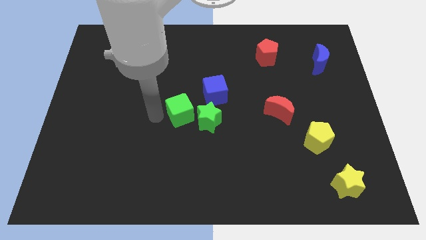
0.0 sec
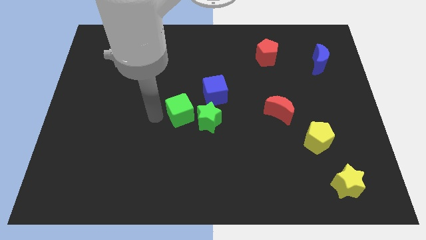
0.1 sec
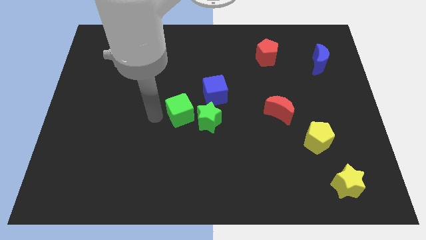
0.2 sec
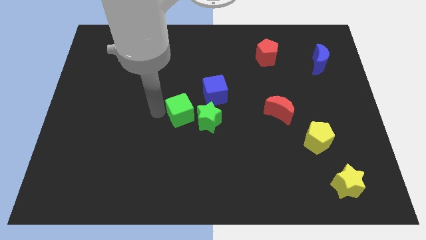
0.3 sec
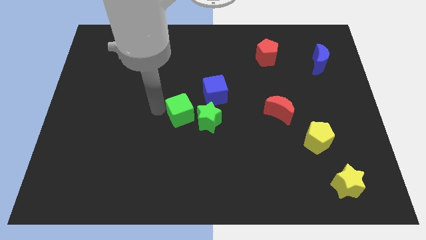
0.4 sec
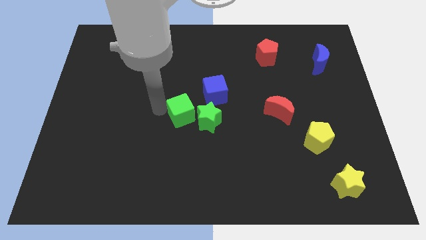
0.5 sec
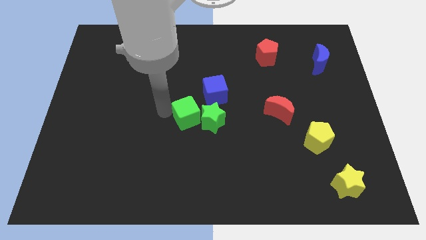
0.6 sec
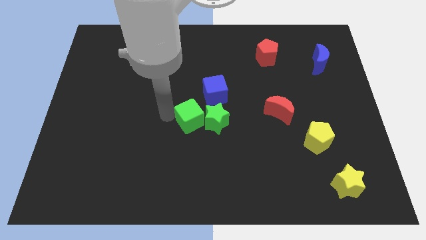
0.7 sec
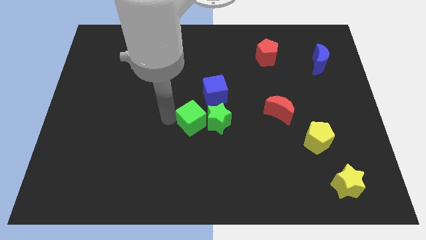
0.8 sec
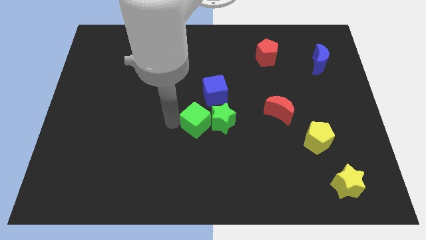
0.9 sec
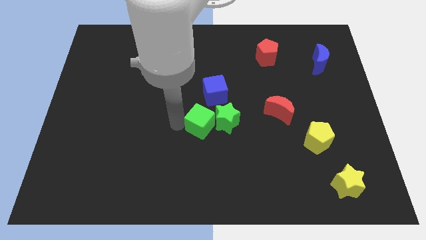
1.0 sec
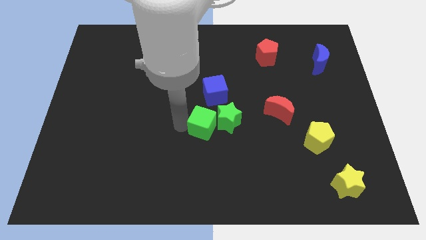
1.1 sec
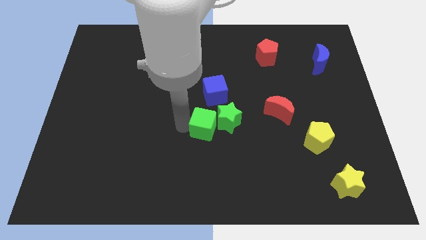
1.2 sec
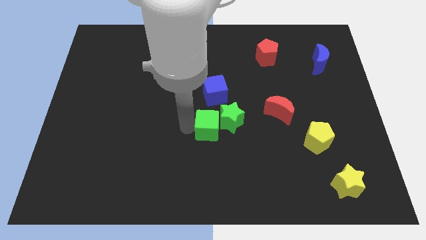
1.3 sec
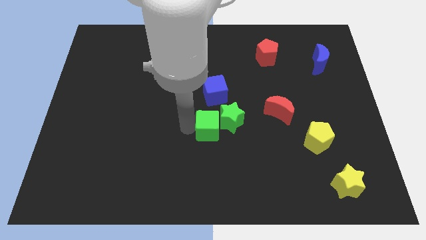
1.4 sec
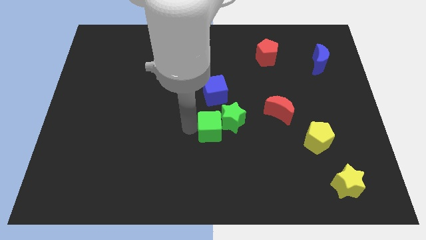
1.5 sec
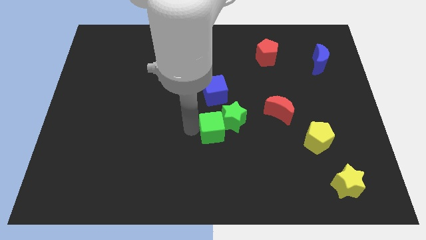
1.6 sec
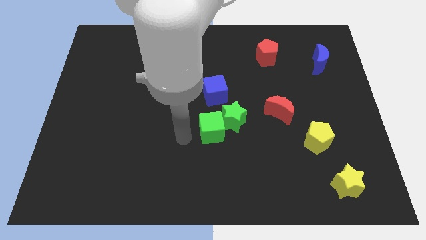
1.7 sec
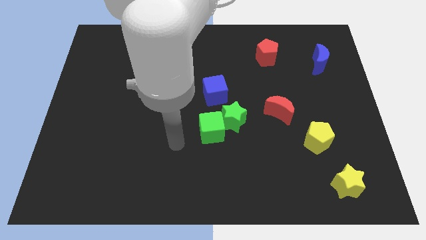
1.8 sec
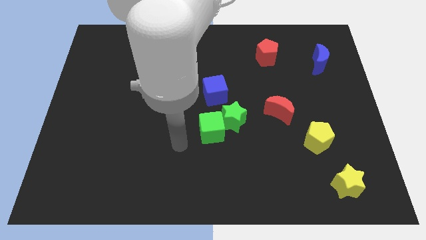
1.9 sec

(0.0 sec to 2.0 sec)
push the green cube into the green star

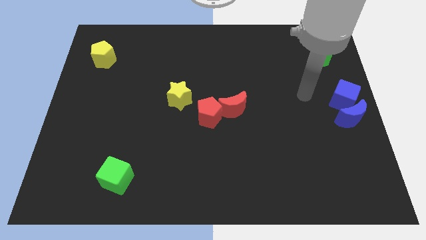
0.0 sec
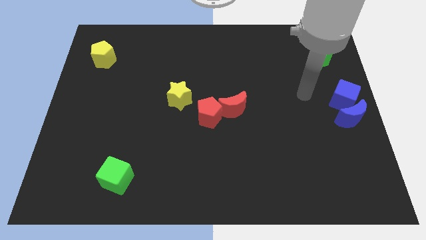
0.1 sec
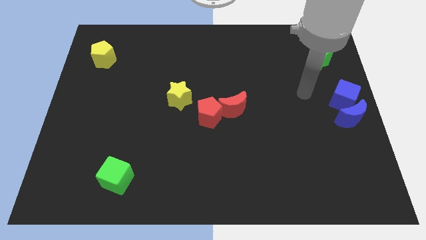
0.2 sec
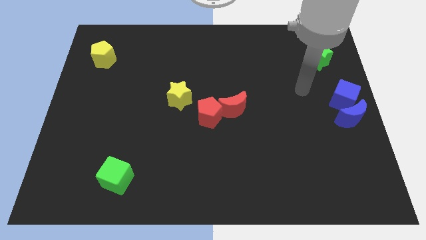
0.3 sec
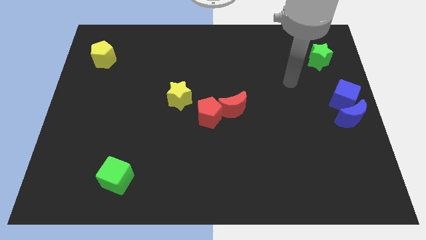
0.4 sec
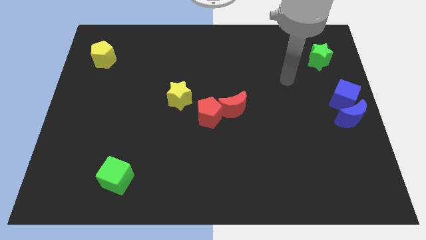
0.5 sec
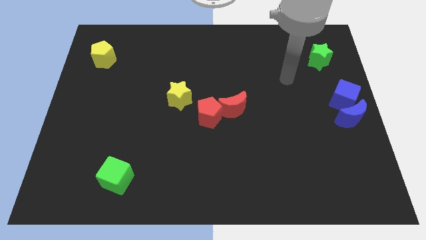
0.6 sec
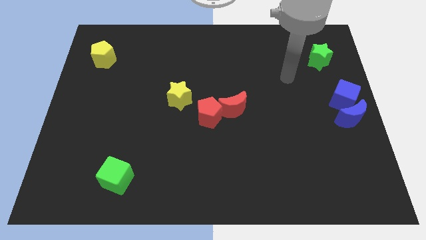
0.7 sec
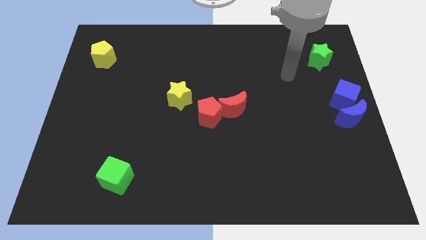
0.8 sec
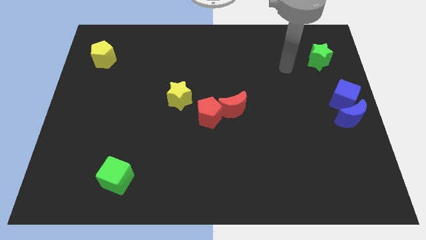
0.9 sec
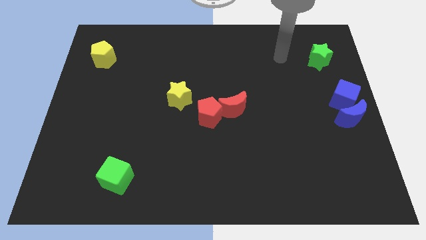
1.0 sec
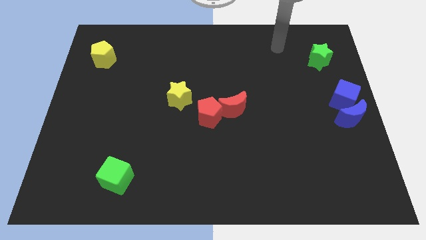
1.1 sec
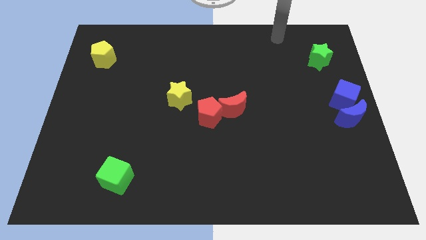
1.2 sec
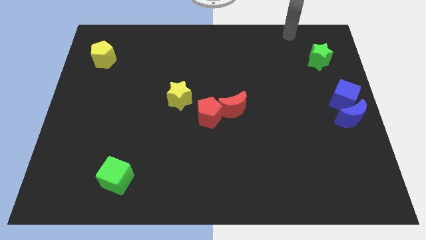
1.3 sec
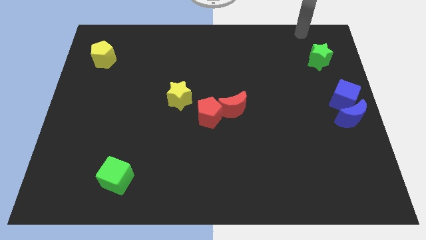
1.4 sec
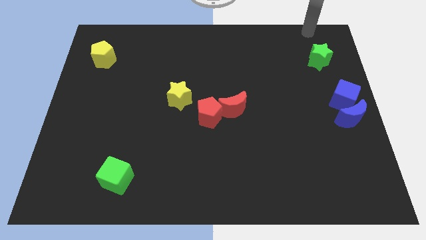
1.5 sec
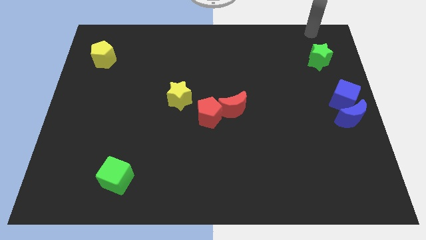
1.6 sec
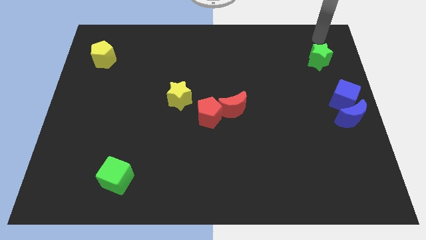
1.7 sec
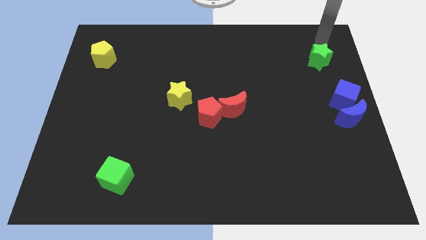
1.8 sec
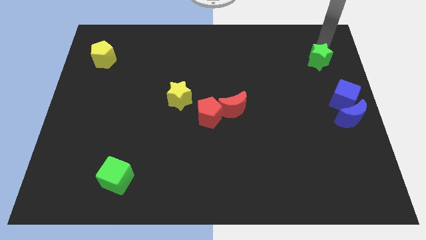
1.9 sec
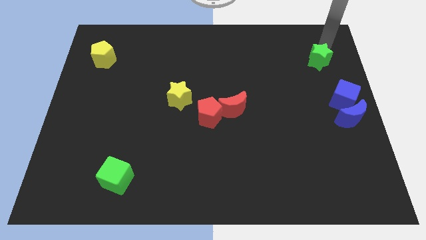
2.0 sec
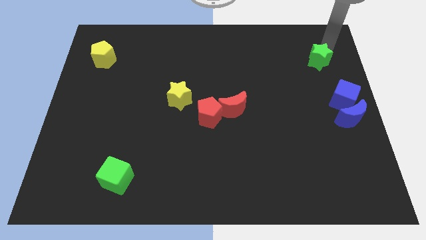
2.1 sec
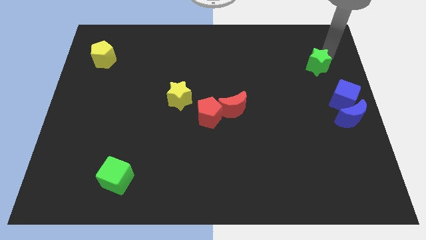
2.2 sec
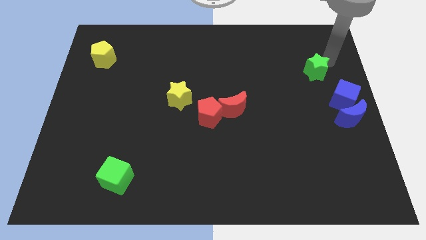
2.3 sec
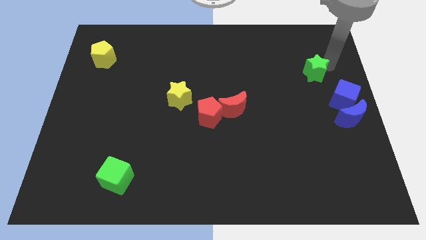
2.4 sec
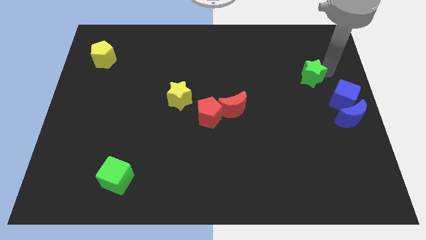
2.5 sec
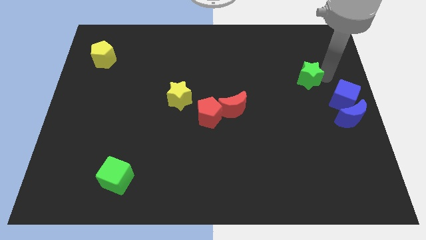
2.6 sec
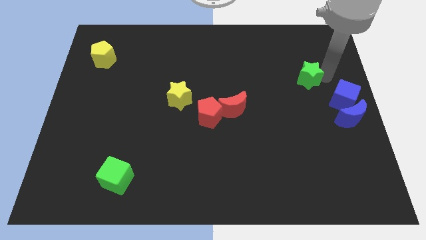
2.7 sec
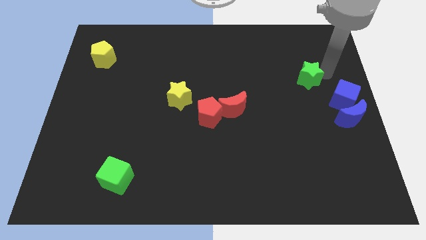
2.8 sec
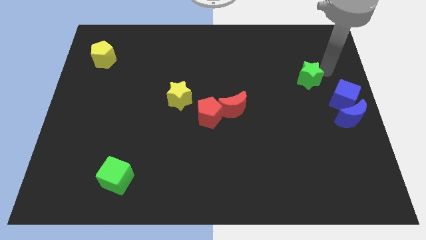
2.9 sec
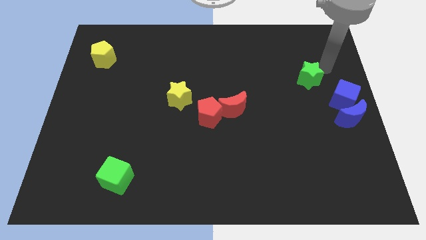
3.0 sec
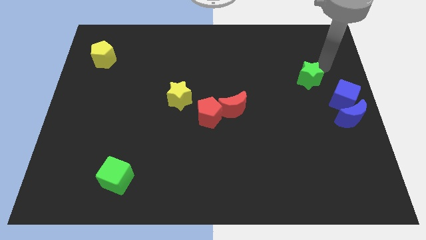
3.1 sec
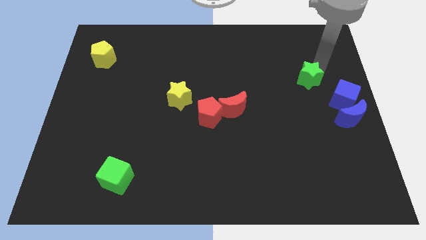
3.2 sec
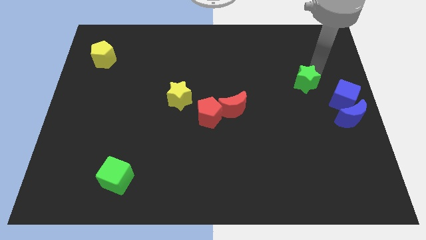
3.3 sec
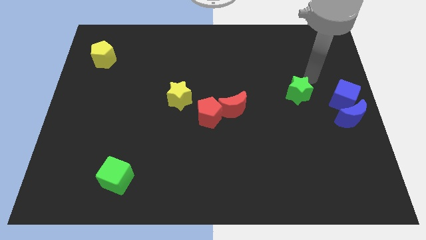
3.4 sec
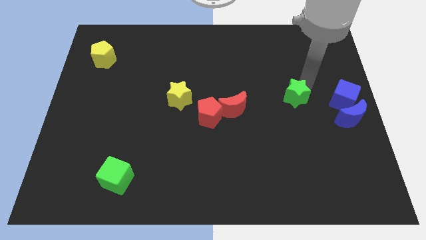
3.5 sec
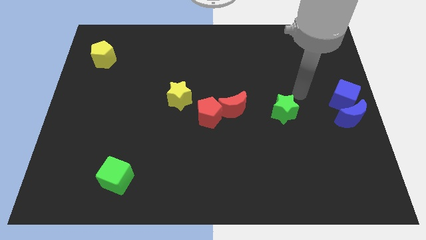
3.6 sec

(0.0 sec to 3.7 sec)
place the green star in between red and blue crescents

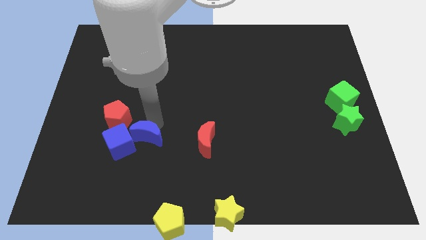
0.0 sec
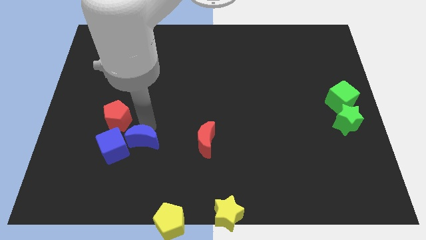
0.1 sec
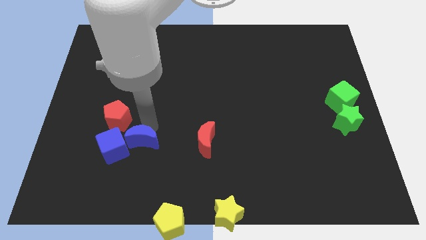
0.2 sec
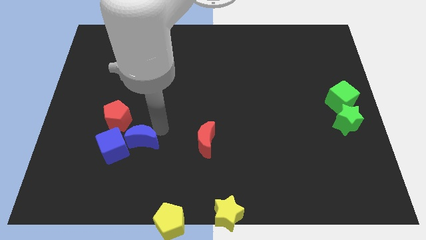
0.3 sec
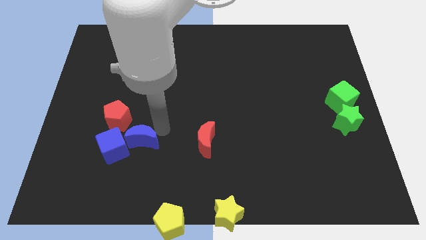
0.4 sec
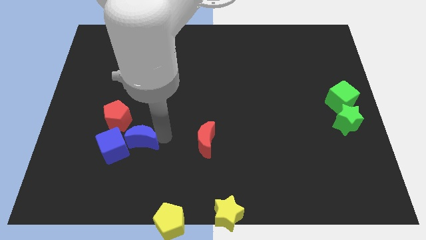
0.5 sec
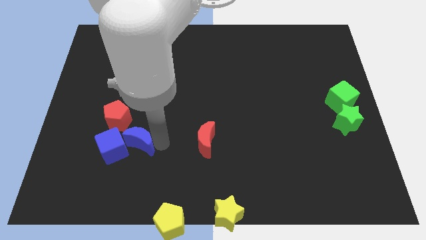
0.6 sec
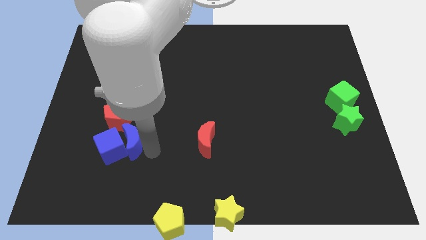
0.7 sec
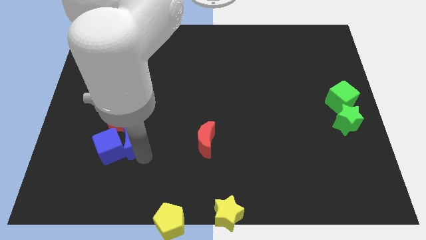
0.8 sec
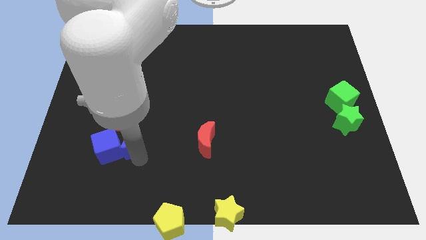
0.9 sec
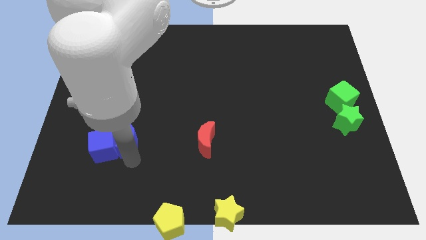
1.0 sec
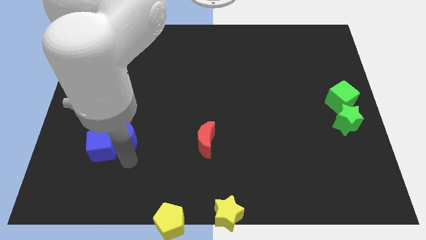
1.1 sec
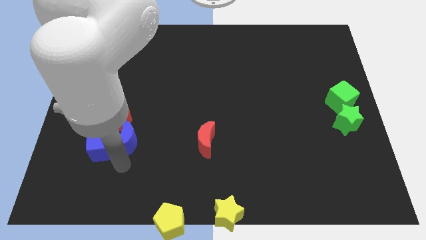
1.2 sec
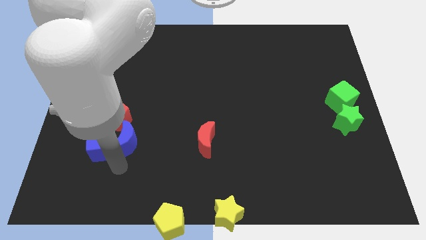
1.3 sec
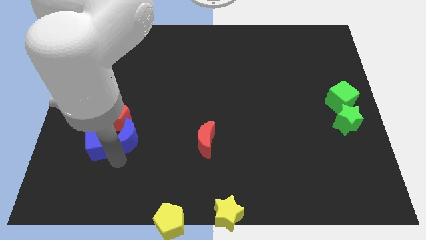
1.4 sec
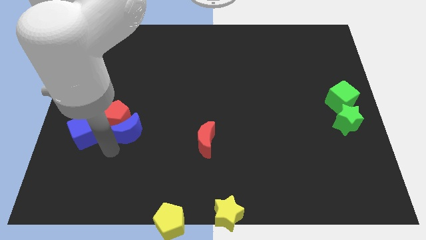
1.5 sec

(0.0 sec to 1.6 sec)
place blue crescent into blue cube and red pentagon

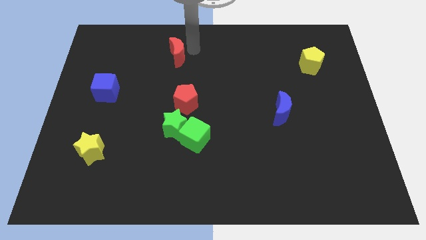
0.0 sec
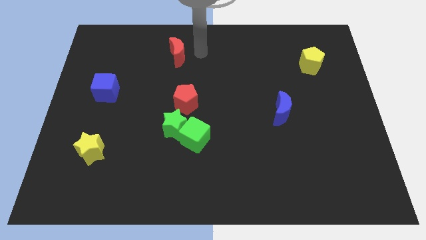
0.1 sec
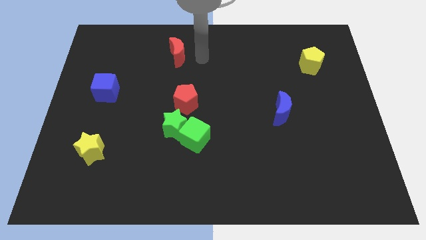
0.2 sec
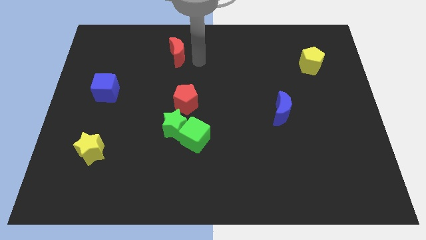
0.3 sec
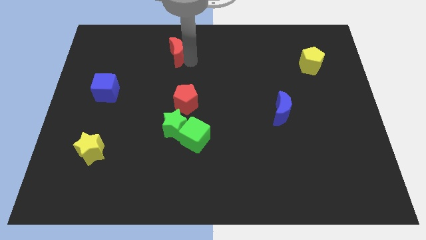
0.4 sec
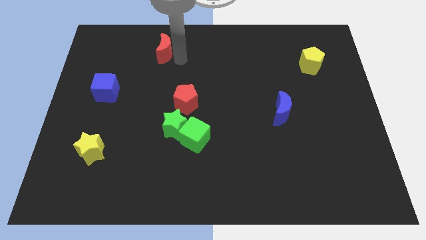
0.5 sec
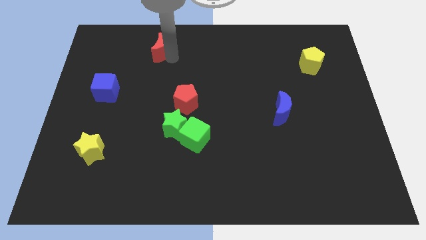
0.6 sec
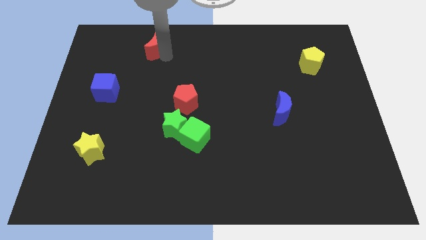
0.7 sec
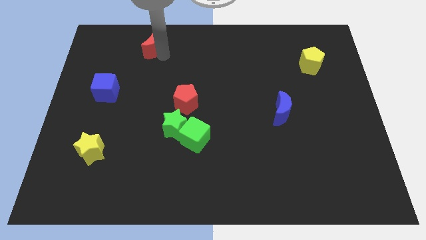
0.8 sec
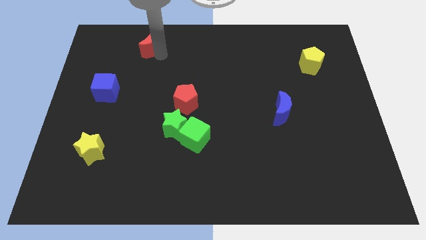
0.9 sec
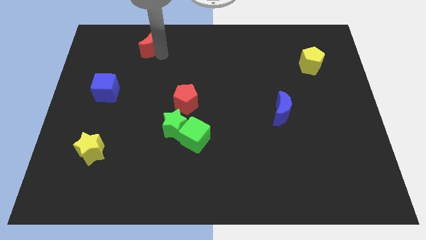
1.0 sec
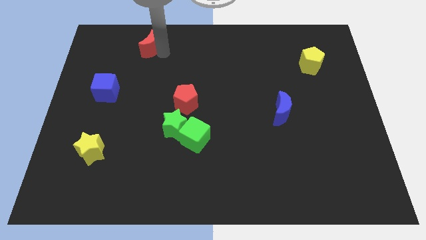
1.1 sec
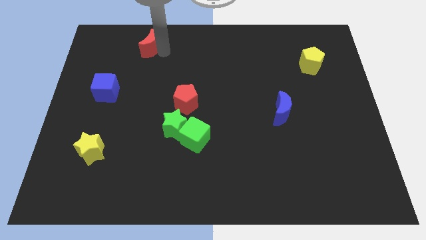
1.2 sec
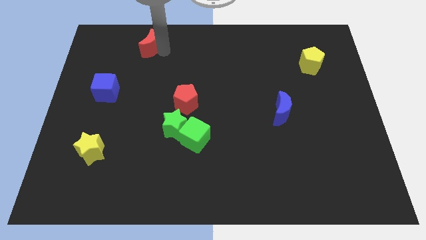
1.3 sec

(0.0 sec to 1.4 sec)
place the red moon diagonally to the blue cube

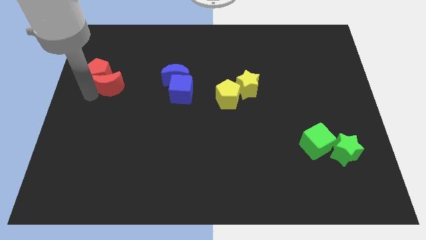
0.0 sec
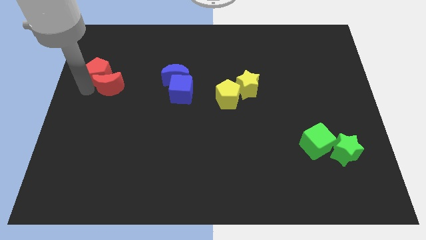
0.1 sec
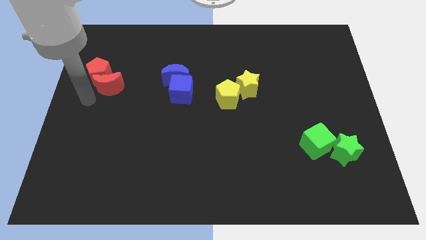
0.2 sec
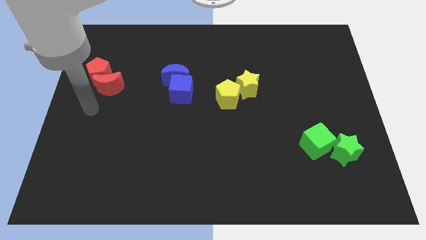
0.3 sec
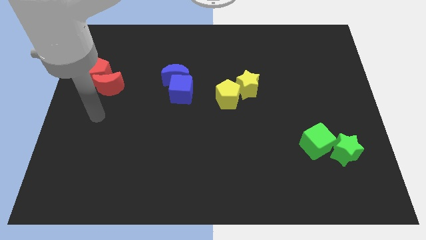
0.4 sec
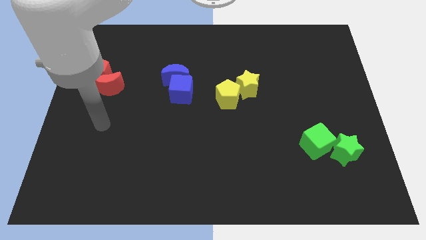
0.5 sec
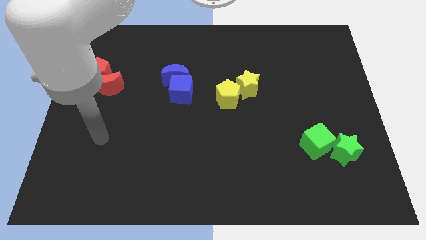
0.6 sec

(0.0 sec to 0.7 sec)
slightly touch the red pentagon from the left
